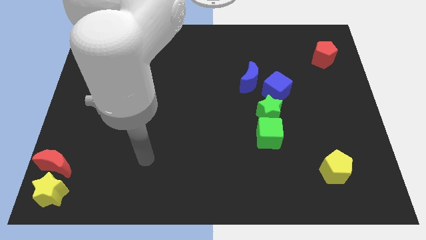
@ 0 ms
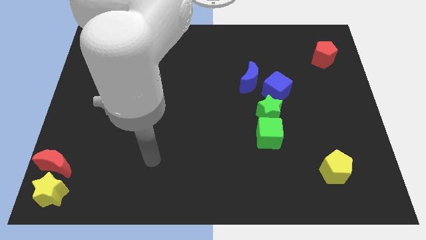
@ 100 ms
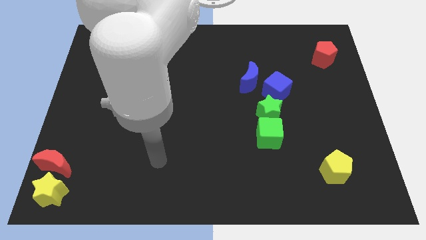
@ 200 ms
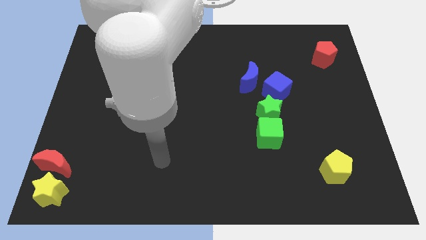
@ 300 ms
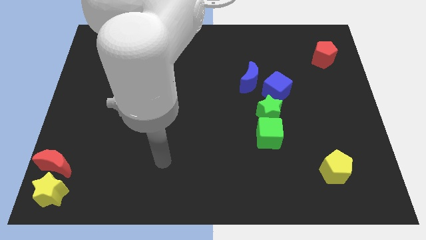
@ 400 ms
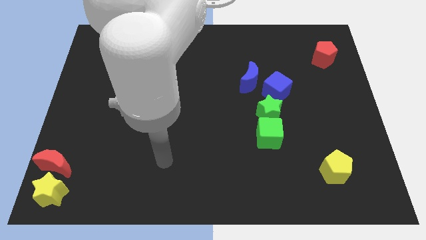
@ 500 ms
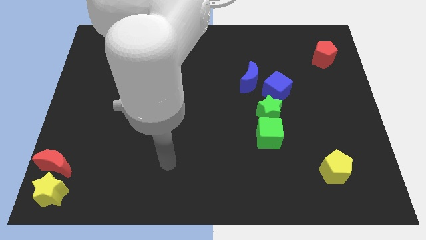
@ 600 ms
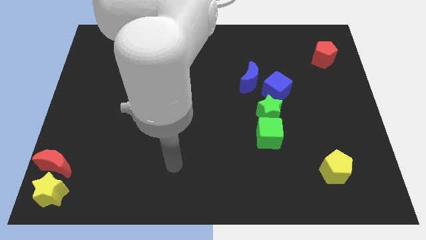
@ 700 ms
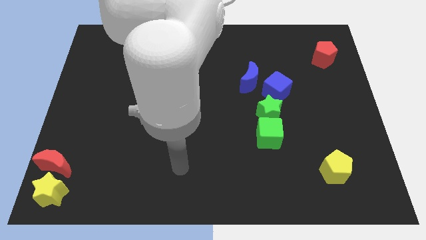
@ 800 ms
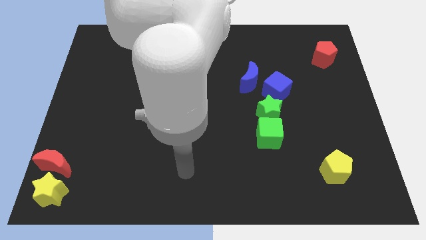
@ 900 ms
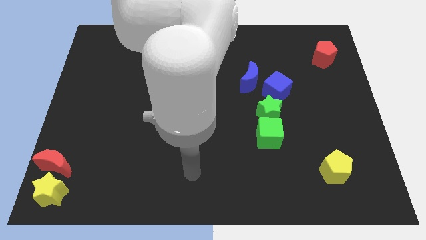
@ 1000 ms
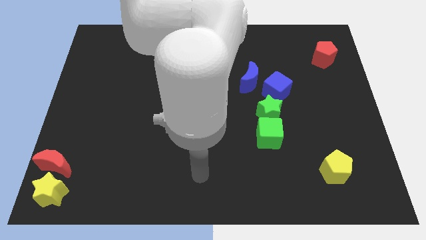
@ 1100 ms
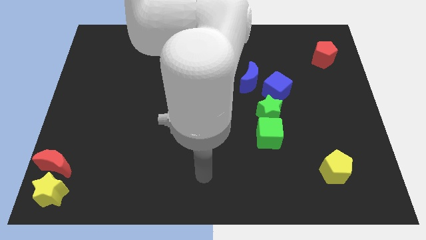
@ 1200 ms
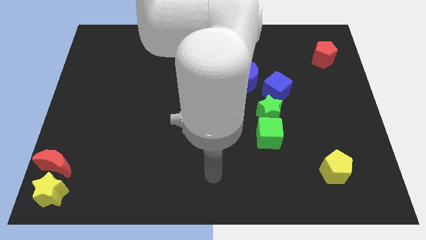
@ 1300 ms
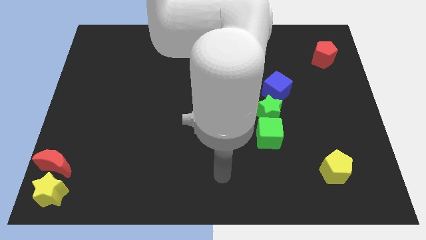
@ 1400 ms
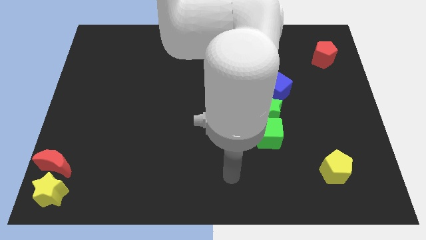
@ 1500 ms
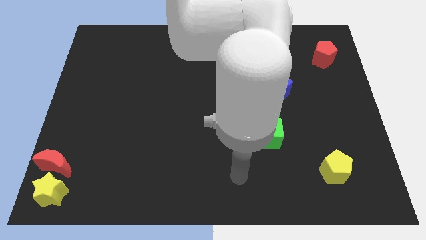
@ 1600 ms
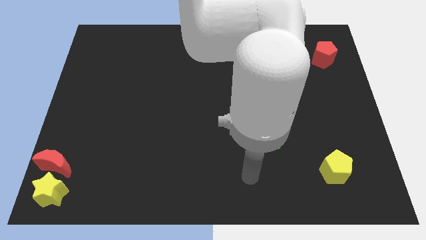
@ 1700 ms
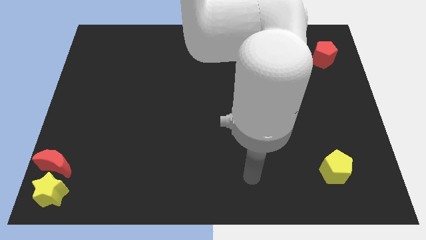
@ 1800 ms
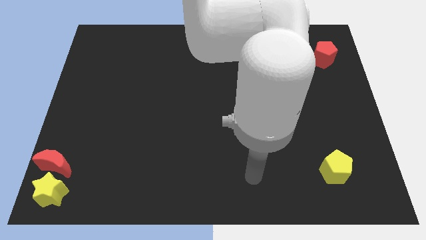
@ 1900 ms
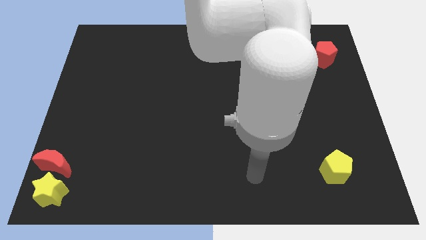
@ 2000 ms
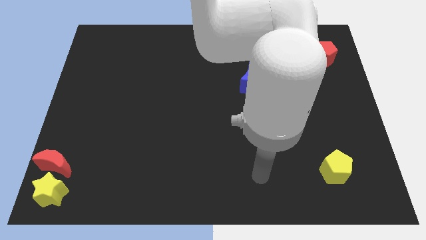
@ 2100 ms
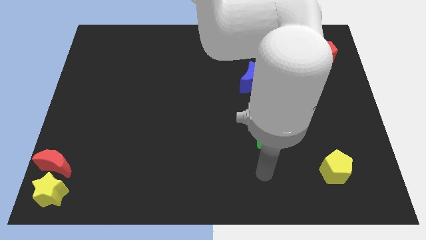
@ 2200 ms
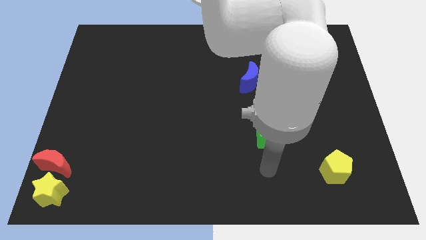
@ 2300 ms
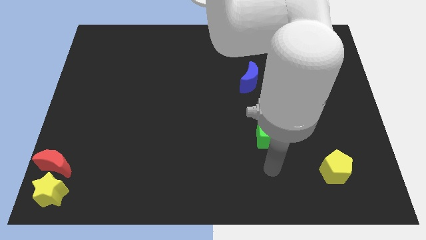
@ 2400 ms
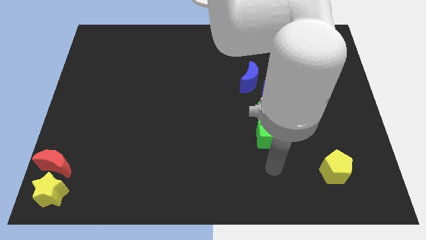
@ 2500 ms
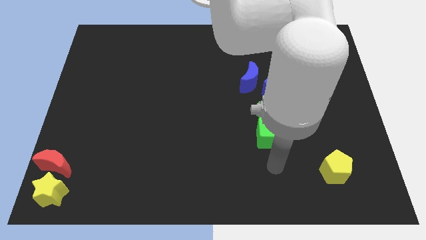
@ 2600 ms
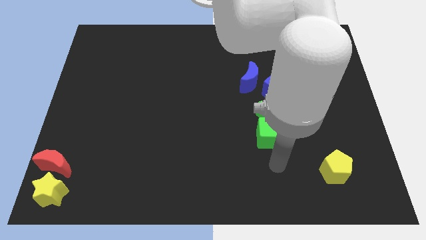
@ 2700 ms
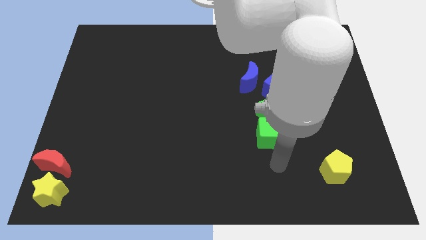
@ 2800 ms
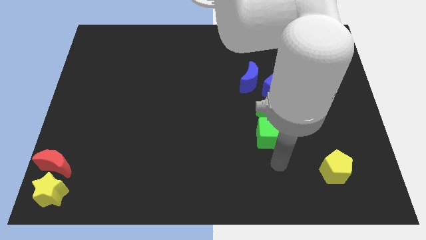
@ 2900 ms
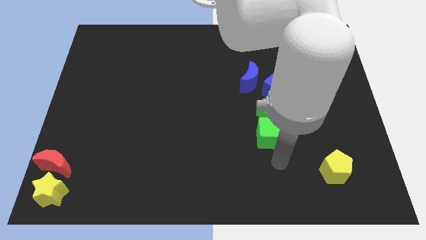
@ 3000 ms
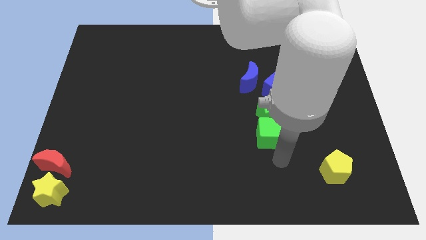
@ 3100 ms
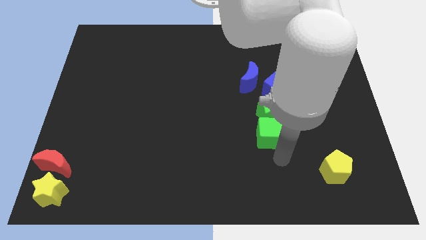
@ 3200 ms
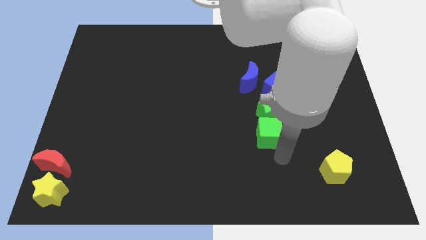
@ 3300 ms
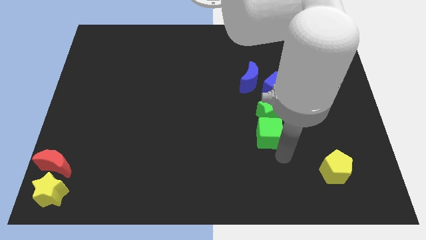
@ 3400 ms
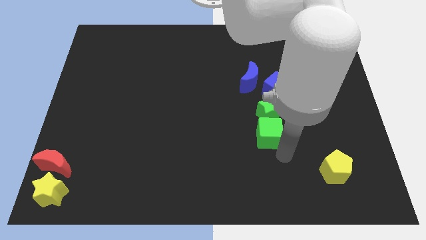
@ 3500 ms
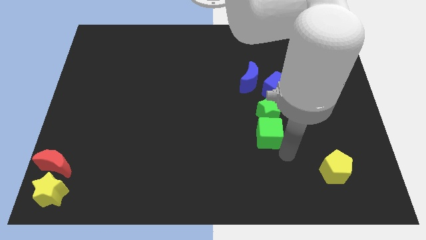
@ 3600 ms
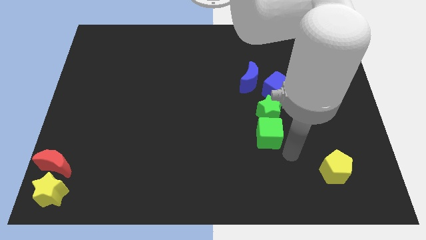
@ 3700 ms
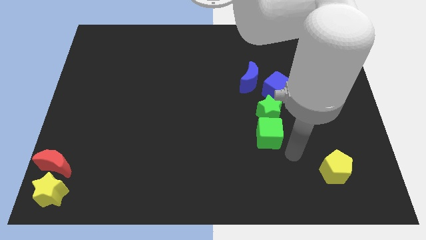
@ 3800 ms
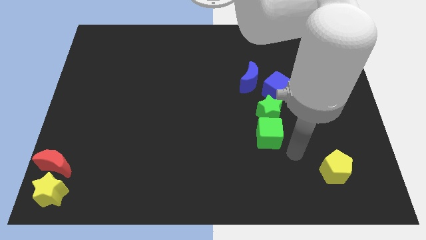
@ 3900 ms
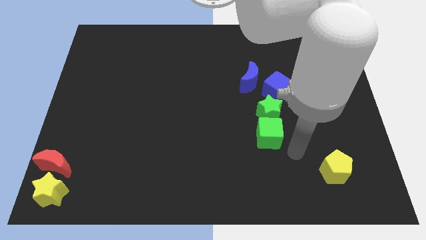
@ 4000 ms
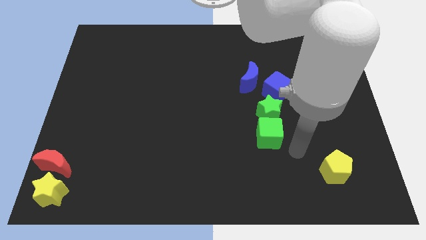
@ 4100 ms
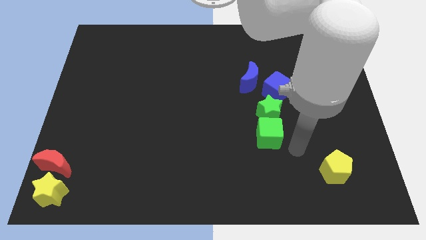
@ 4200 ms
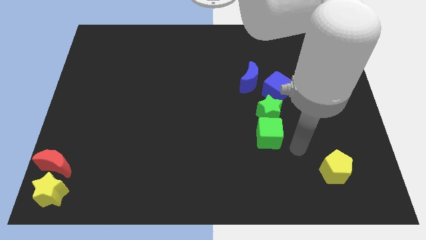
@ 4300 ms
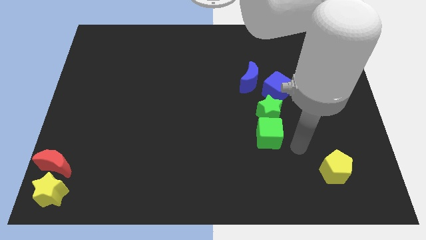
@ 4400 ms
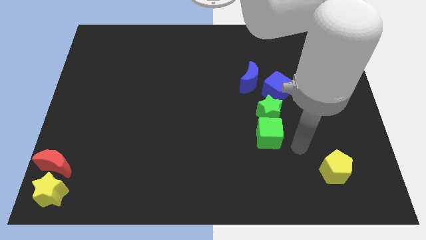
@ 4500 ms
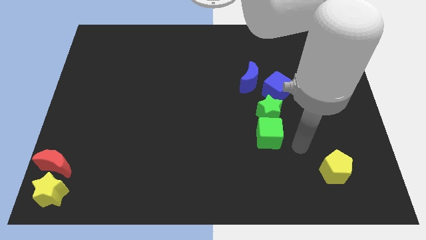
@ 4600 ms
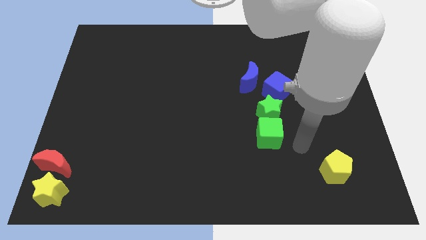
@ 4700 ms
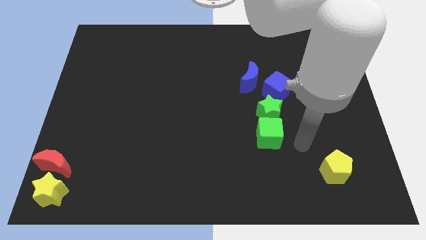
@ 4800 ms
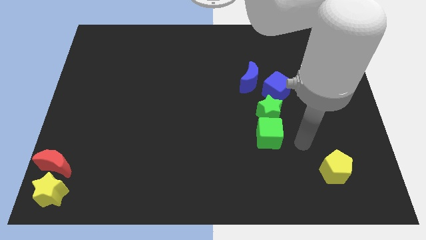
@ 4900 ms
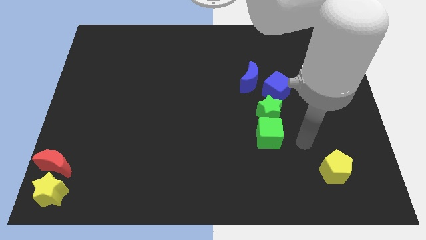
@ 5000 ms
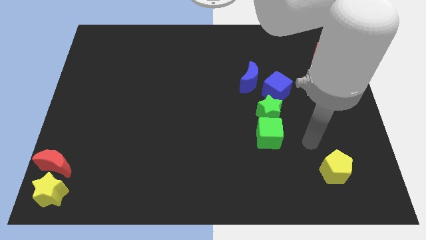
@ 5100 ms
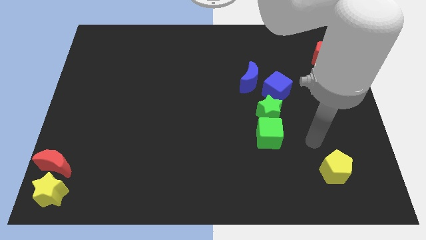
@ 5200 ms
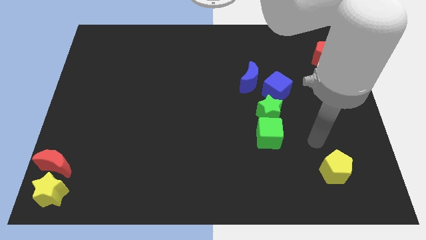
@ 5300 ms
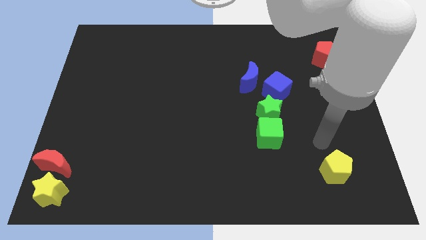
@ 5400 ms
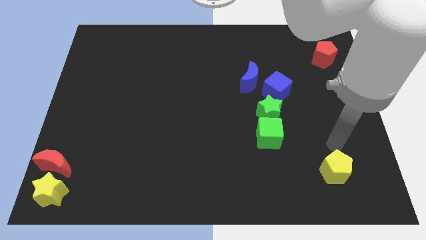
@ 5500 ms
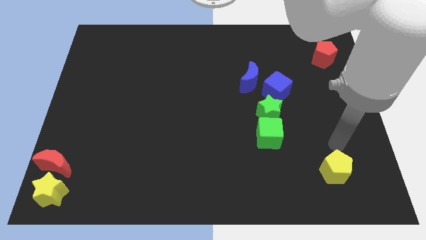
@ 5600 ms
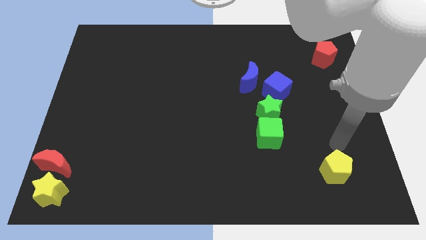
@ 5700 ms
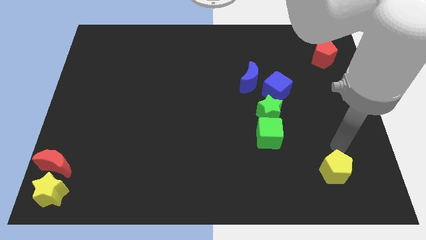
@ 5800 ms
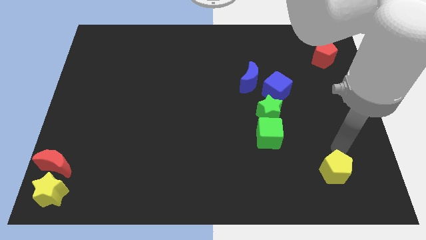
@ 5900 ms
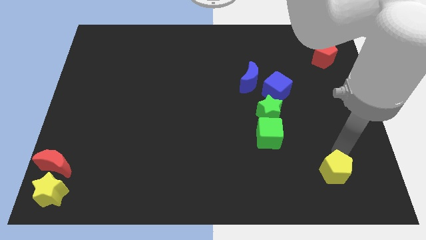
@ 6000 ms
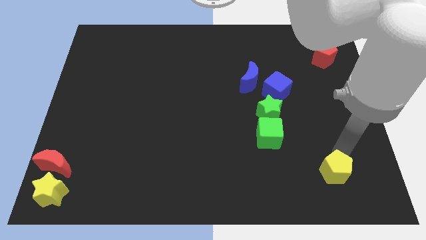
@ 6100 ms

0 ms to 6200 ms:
place your arm to the top of yellow pentagon

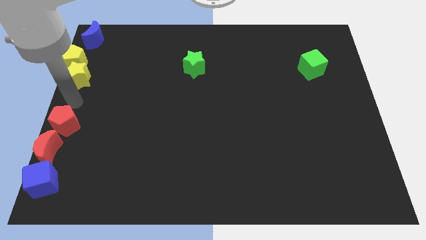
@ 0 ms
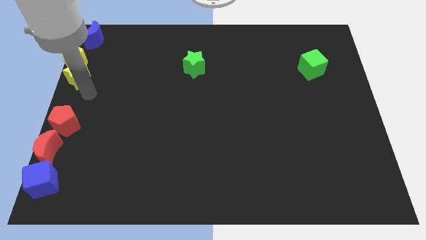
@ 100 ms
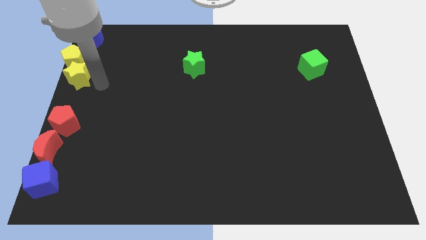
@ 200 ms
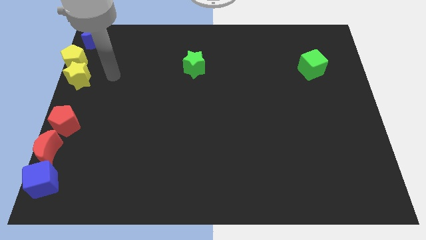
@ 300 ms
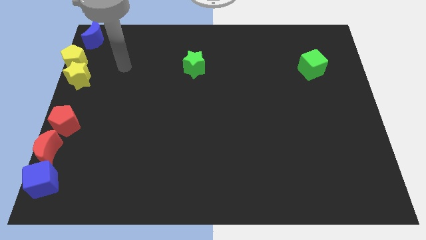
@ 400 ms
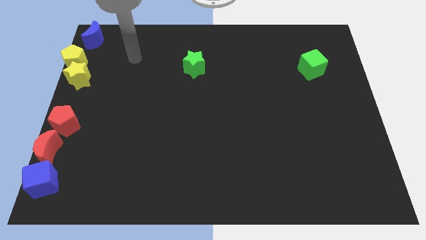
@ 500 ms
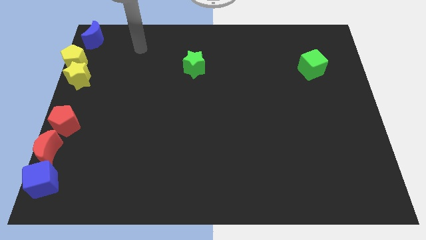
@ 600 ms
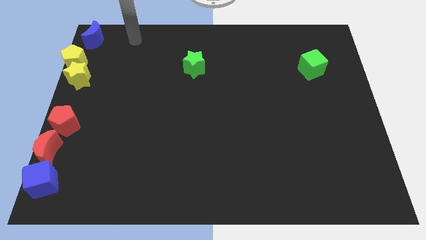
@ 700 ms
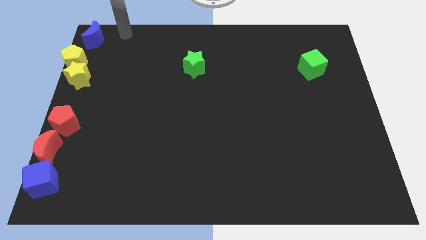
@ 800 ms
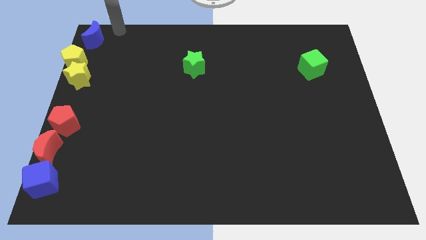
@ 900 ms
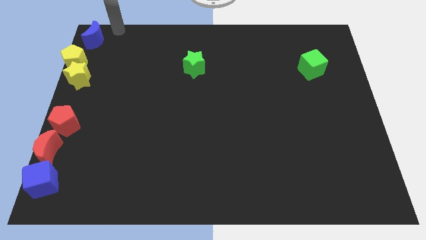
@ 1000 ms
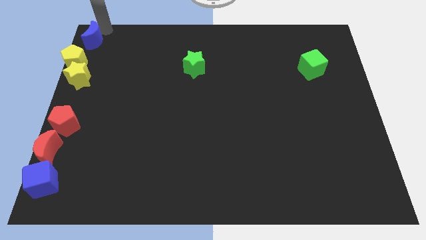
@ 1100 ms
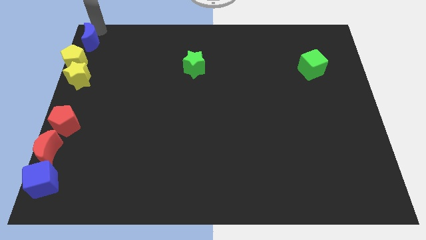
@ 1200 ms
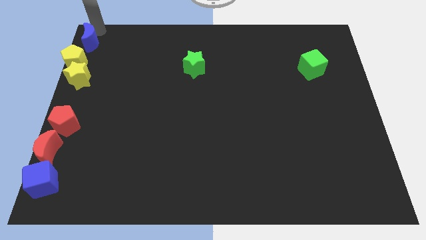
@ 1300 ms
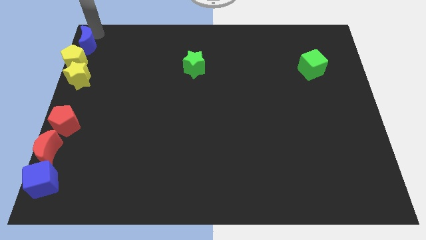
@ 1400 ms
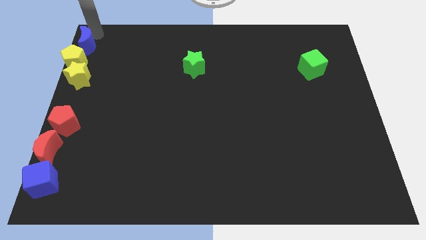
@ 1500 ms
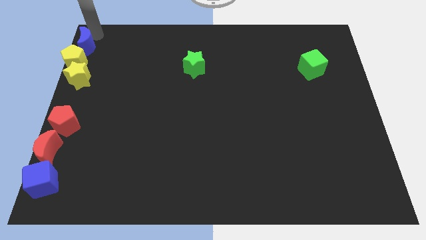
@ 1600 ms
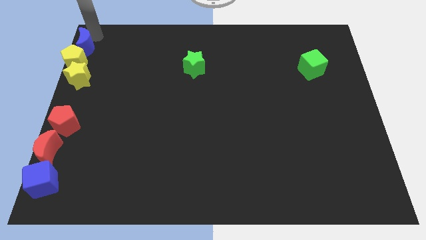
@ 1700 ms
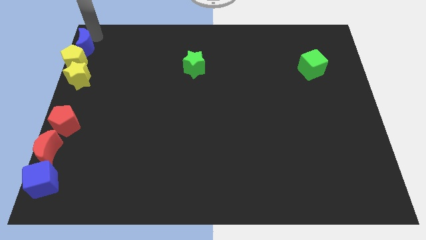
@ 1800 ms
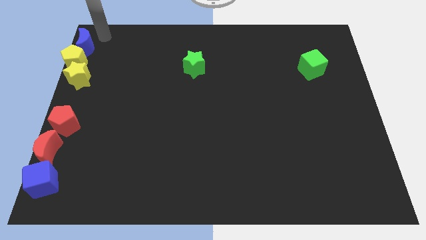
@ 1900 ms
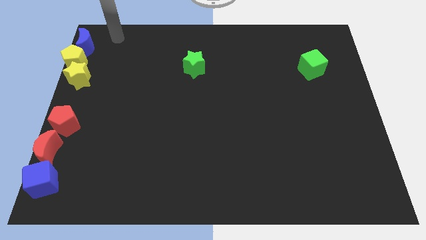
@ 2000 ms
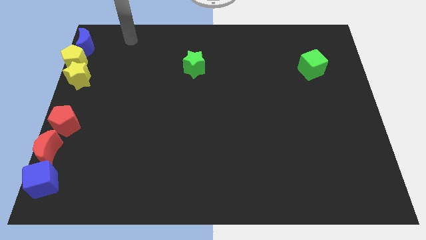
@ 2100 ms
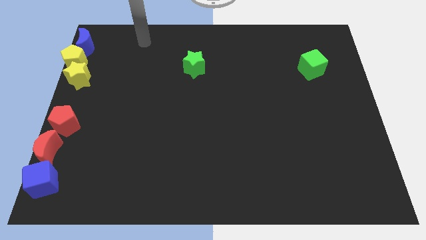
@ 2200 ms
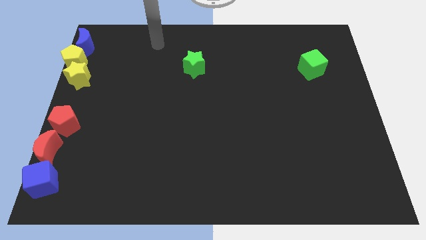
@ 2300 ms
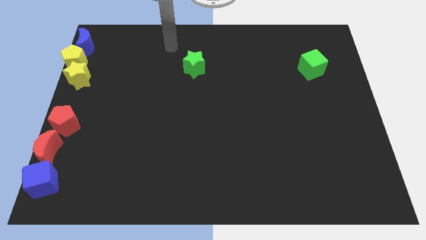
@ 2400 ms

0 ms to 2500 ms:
move blue moon closer to yellow pentagon

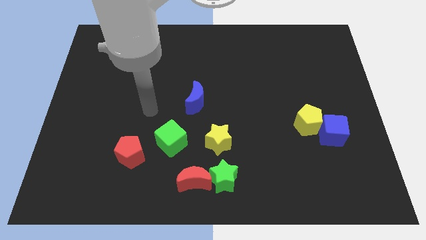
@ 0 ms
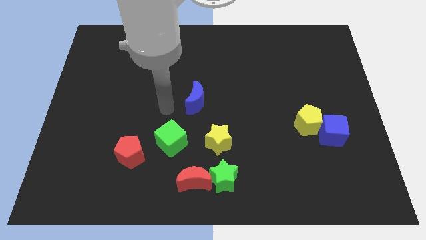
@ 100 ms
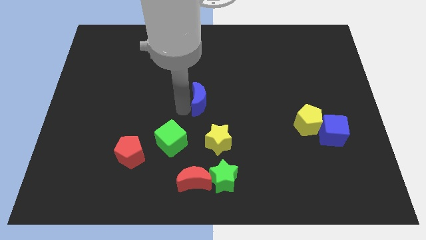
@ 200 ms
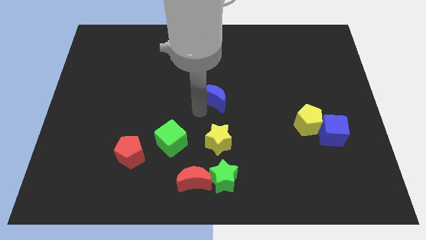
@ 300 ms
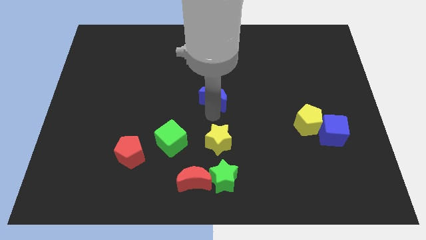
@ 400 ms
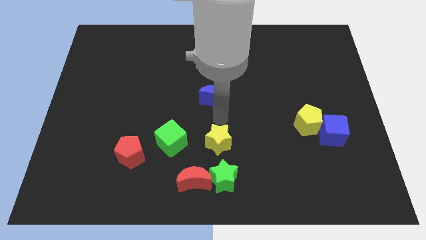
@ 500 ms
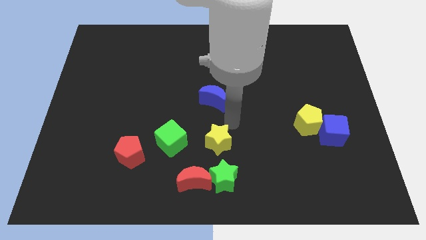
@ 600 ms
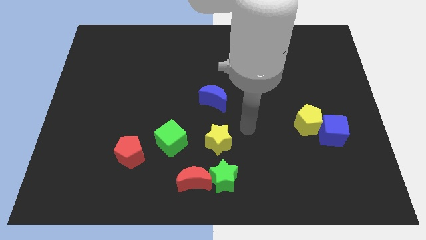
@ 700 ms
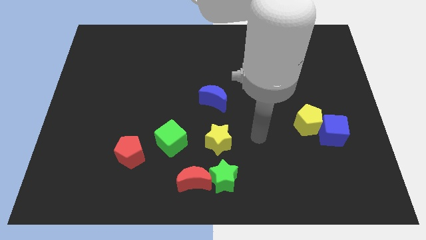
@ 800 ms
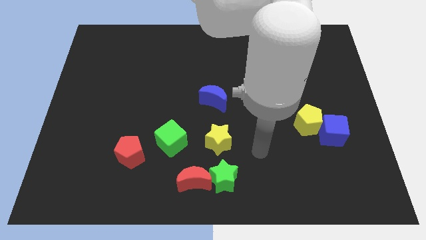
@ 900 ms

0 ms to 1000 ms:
slightly touch down to the blue moon
